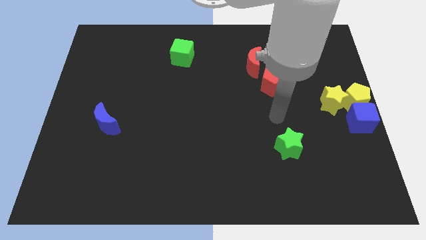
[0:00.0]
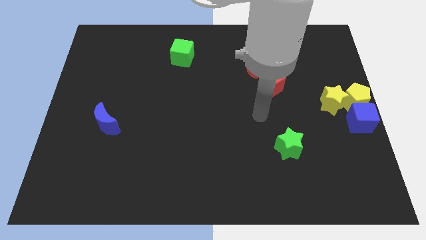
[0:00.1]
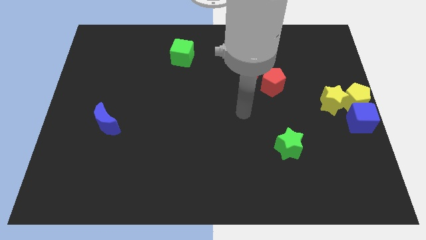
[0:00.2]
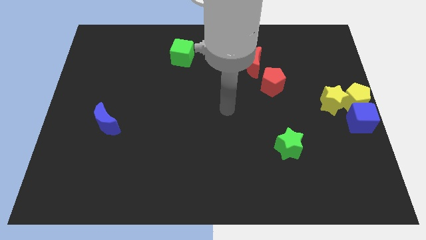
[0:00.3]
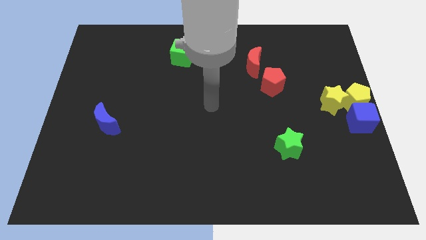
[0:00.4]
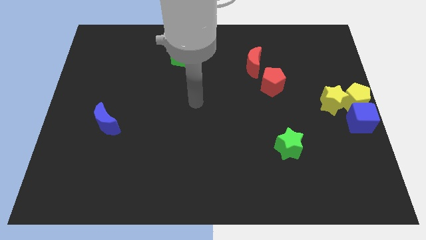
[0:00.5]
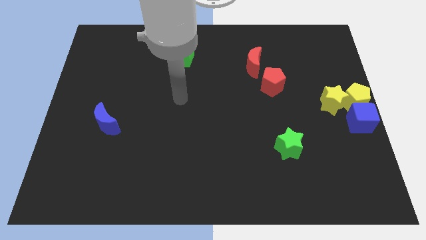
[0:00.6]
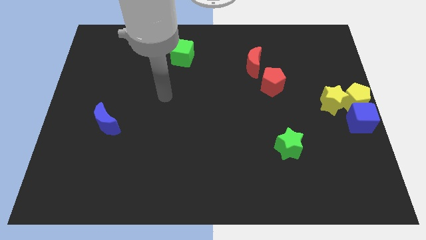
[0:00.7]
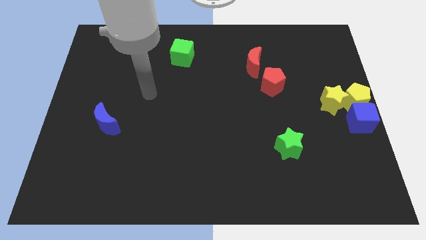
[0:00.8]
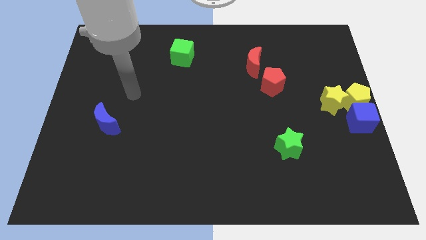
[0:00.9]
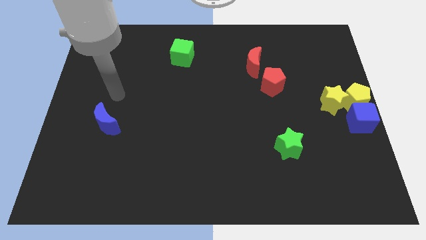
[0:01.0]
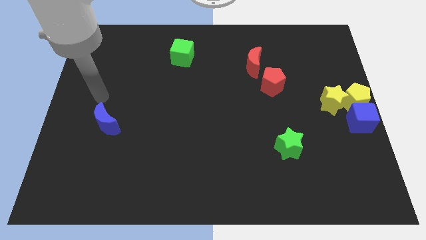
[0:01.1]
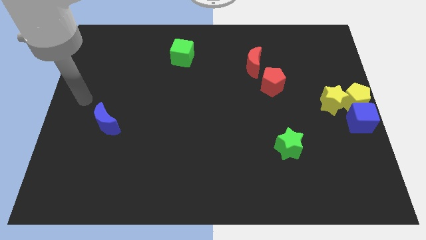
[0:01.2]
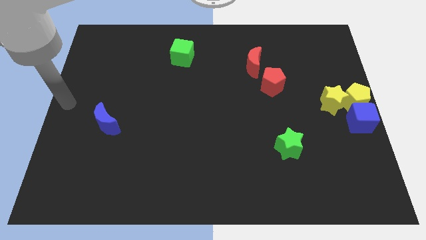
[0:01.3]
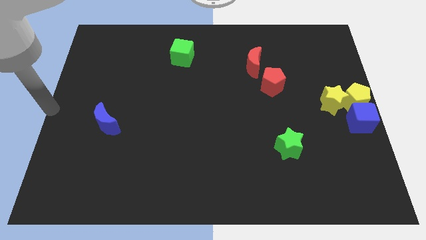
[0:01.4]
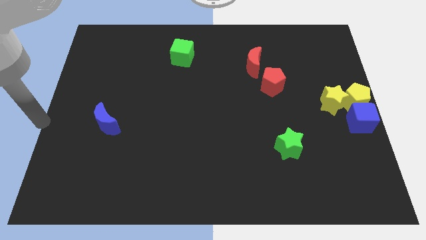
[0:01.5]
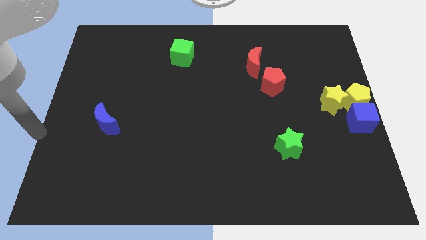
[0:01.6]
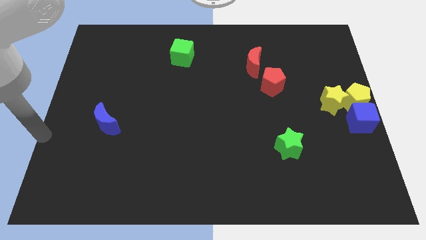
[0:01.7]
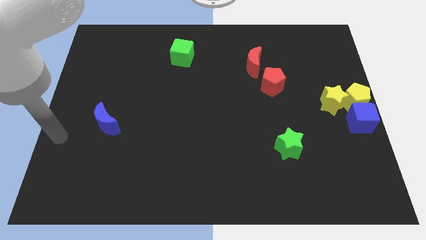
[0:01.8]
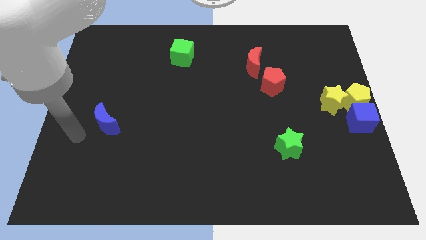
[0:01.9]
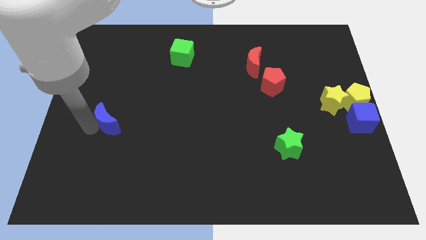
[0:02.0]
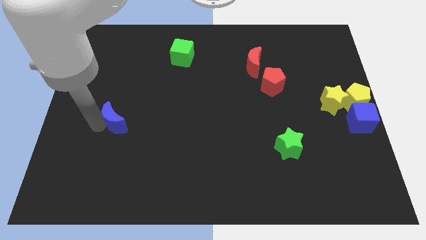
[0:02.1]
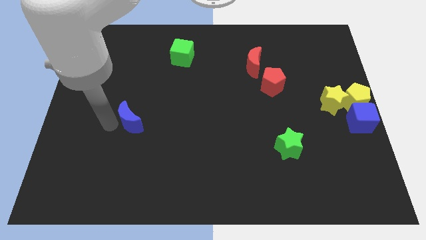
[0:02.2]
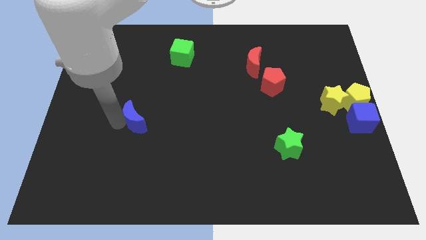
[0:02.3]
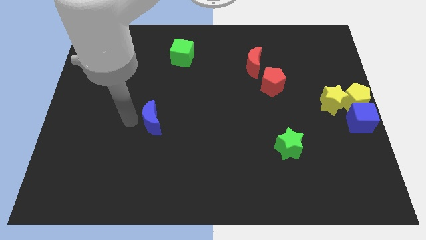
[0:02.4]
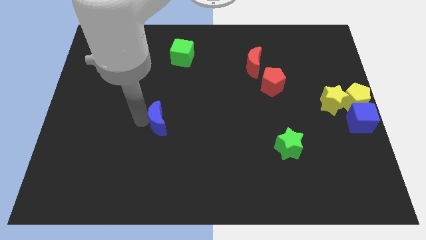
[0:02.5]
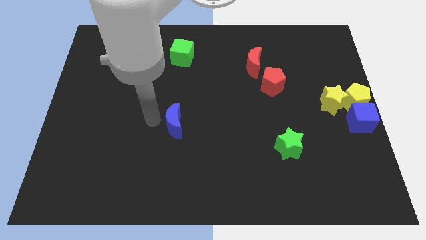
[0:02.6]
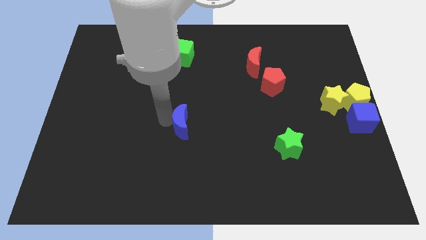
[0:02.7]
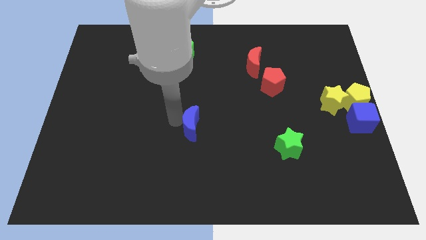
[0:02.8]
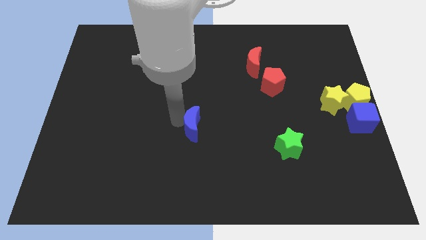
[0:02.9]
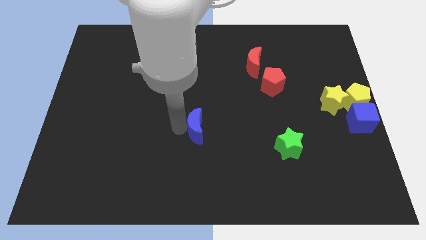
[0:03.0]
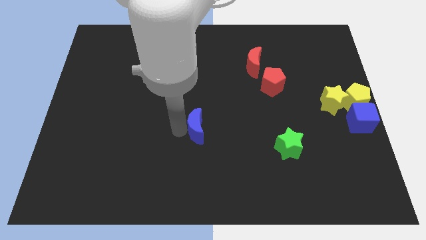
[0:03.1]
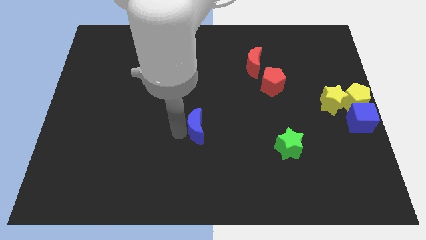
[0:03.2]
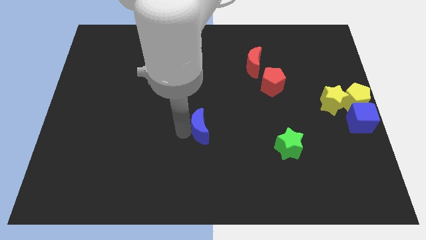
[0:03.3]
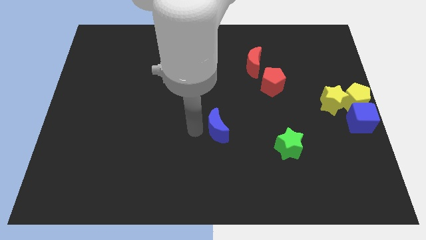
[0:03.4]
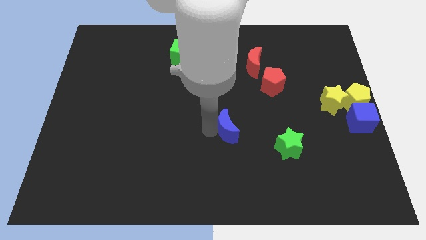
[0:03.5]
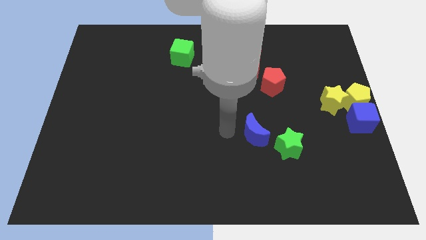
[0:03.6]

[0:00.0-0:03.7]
move the blue crescent towards the green star

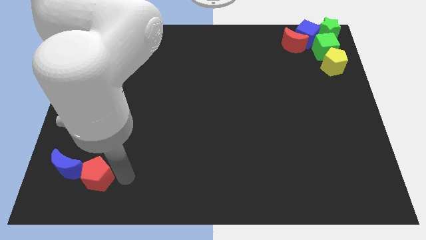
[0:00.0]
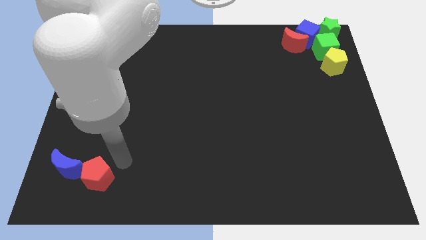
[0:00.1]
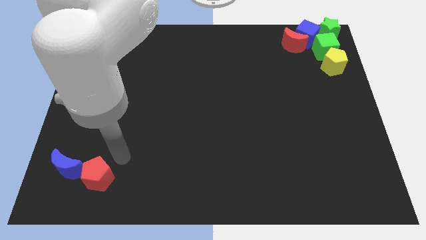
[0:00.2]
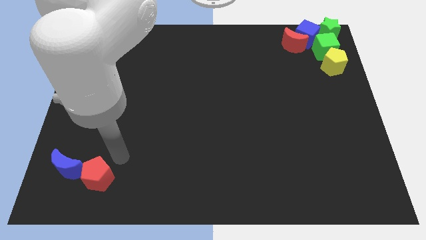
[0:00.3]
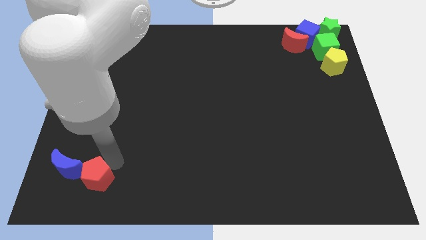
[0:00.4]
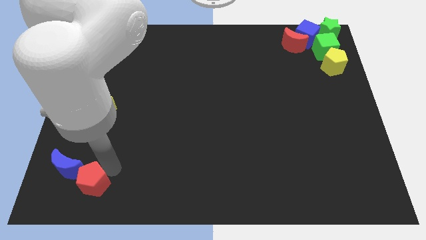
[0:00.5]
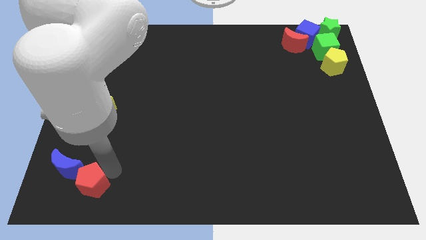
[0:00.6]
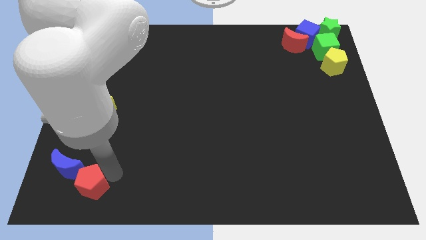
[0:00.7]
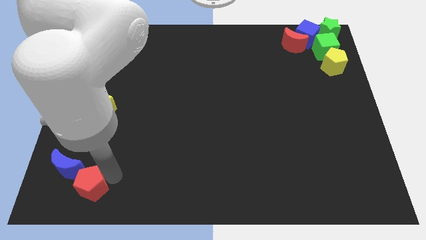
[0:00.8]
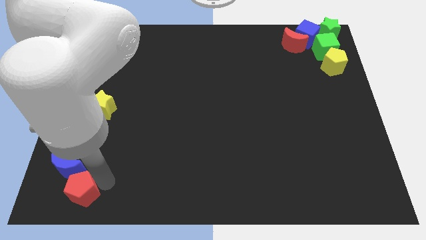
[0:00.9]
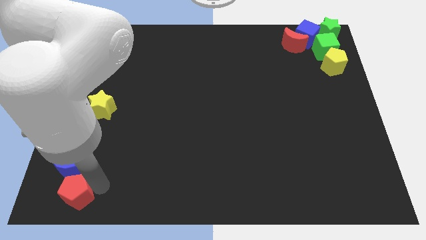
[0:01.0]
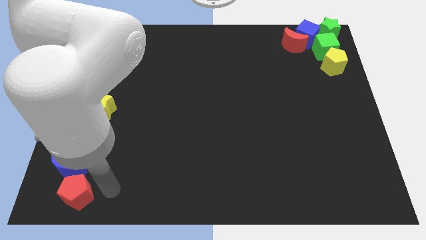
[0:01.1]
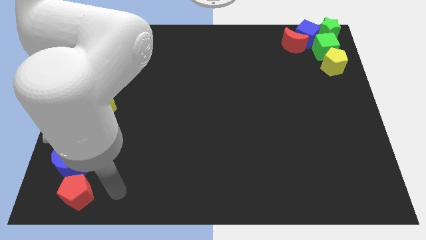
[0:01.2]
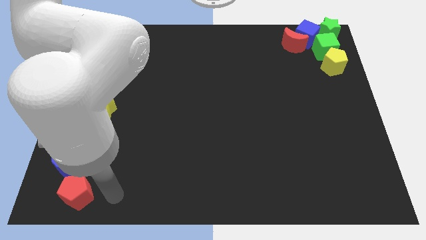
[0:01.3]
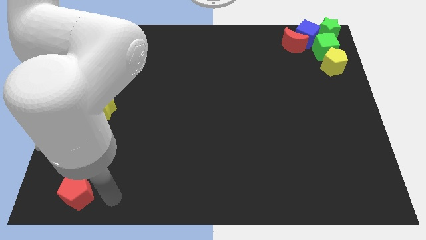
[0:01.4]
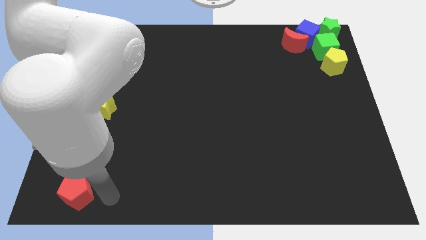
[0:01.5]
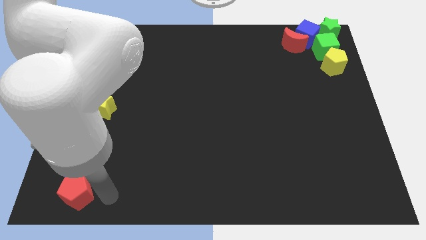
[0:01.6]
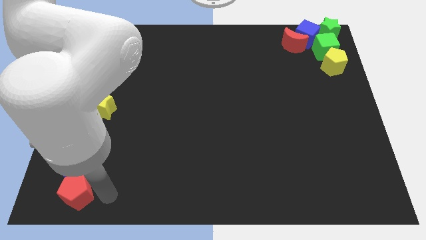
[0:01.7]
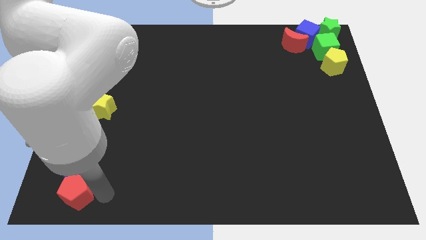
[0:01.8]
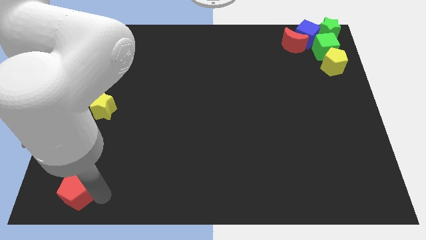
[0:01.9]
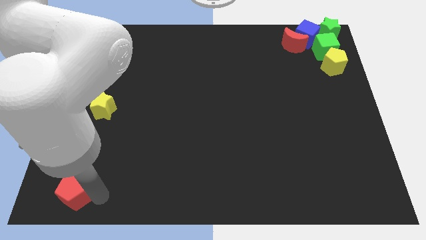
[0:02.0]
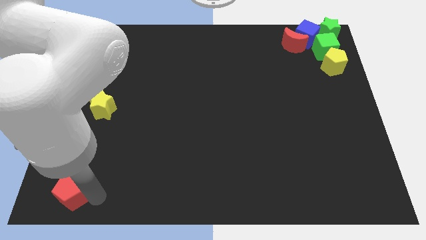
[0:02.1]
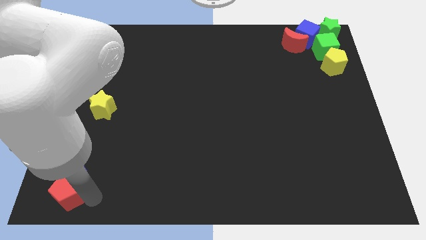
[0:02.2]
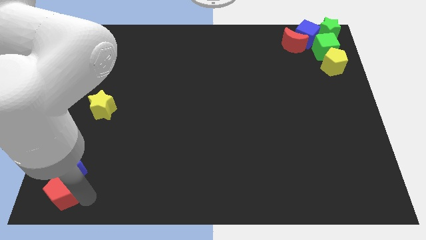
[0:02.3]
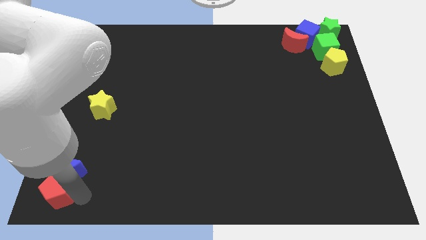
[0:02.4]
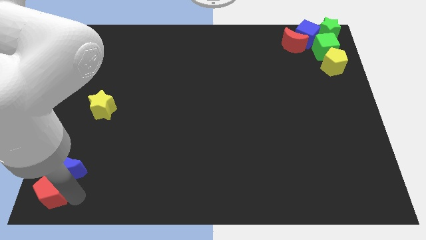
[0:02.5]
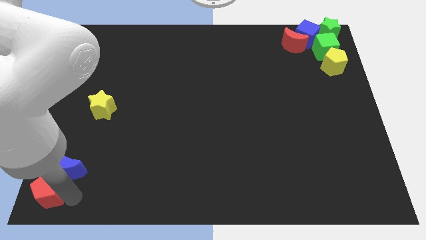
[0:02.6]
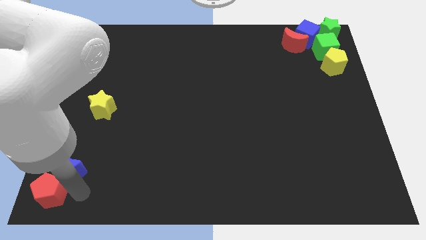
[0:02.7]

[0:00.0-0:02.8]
place red pentagon below blue crescent

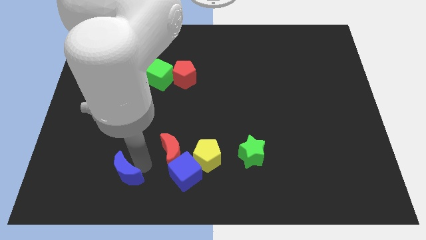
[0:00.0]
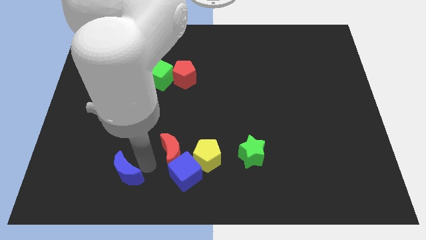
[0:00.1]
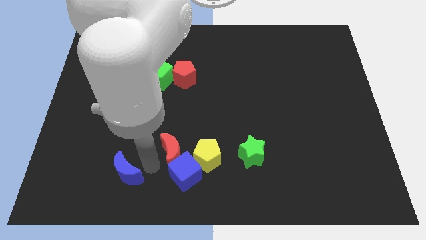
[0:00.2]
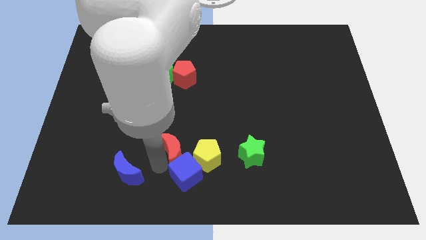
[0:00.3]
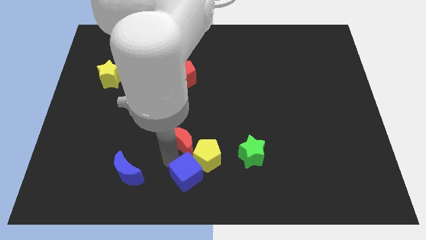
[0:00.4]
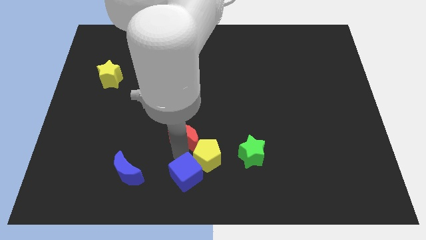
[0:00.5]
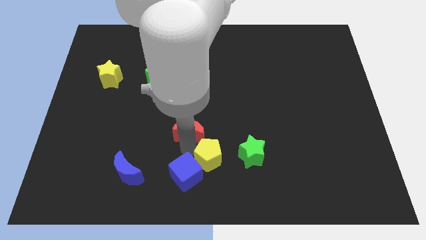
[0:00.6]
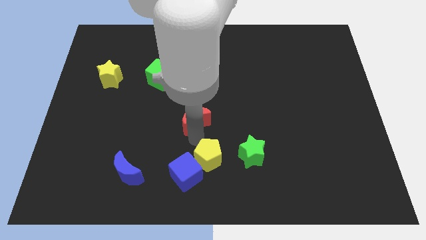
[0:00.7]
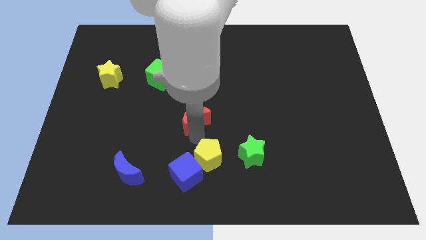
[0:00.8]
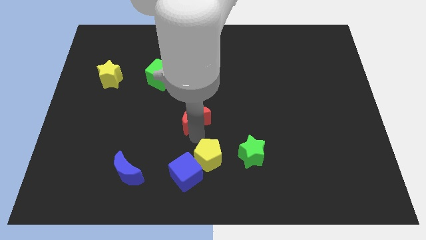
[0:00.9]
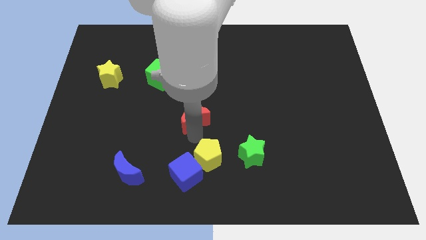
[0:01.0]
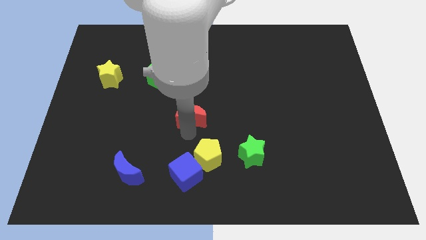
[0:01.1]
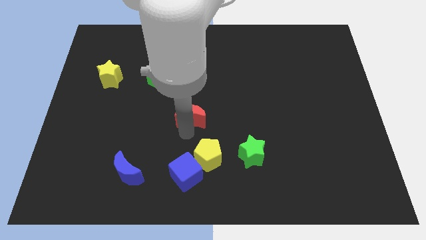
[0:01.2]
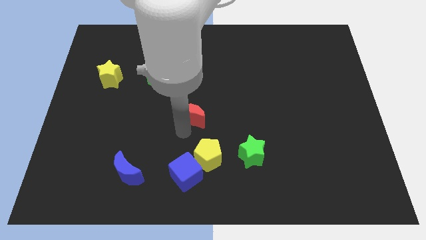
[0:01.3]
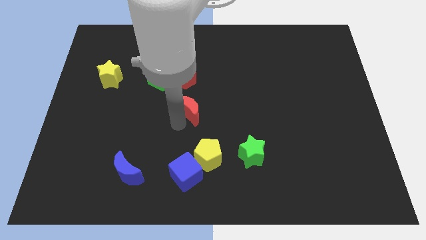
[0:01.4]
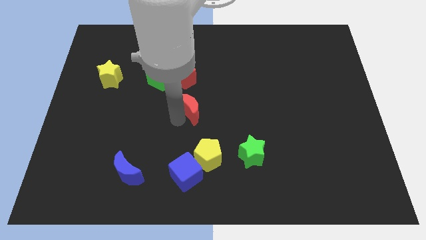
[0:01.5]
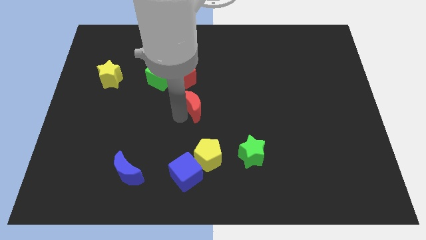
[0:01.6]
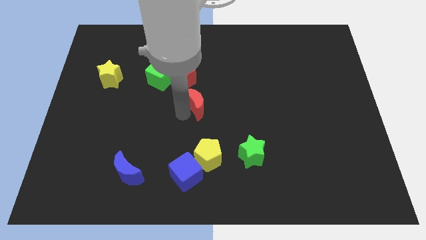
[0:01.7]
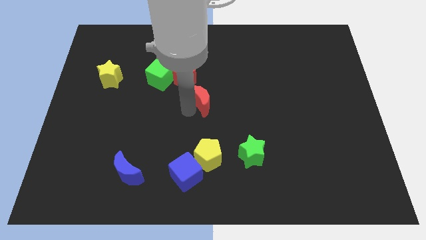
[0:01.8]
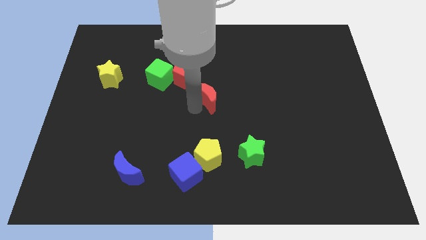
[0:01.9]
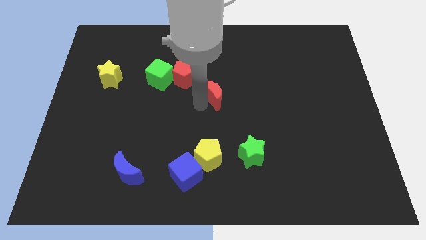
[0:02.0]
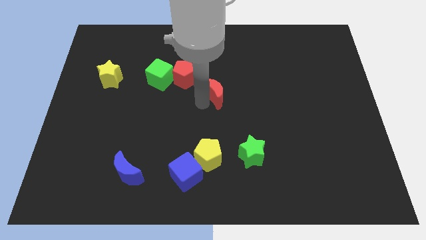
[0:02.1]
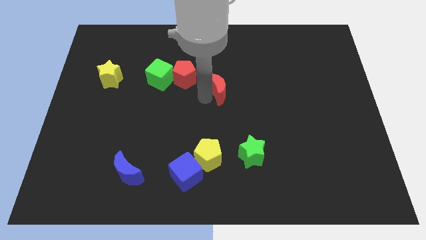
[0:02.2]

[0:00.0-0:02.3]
place the red moon diagonally to the bottom right of the red pentagon

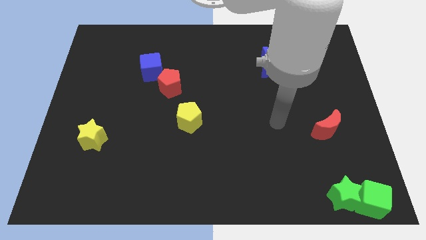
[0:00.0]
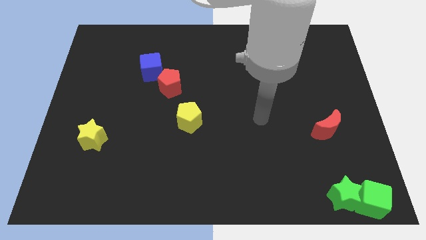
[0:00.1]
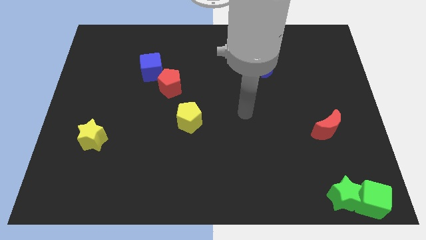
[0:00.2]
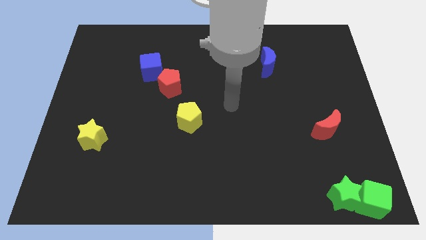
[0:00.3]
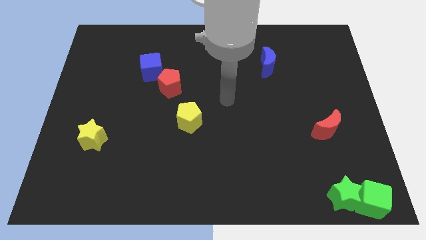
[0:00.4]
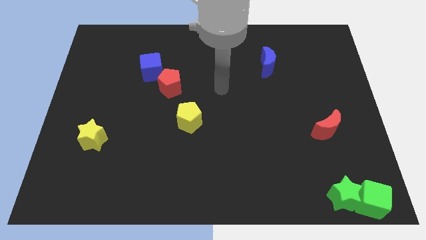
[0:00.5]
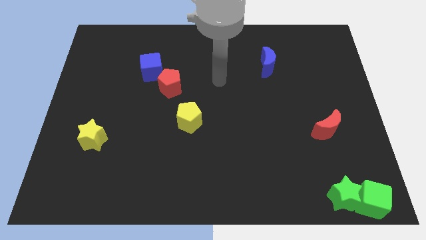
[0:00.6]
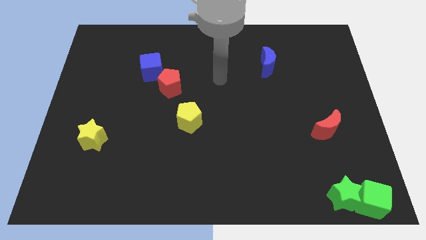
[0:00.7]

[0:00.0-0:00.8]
put your arm in between the blue moon and red pentagon
